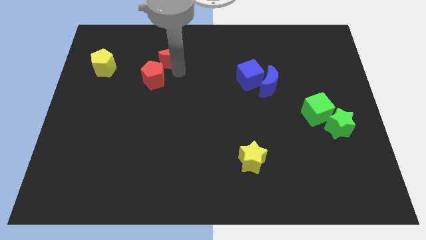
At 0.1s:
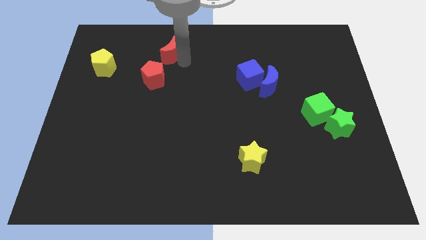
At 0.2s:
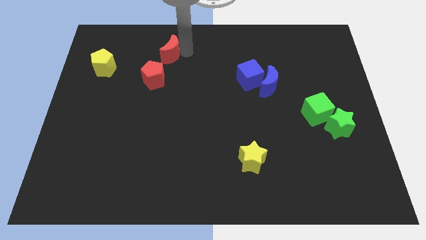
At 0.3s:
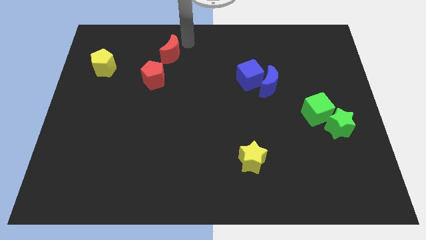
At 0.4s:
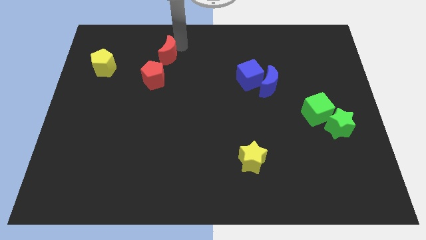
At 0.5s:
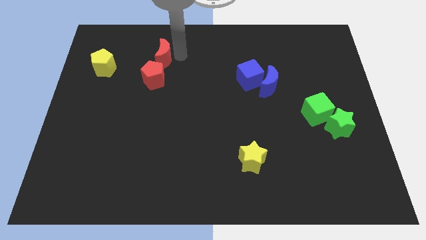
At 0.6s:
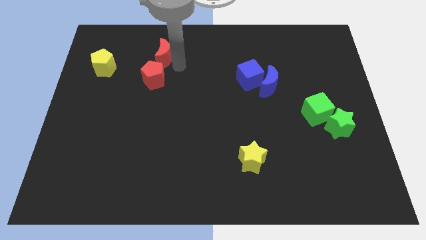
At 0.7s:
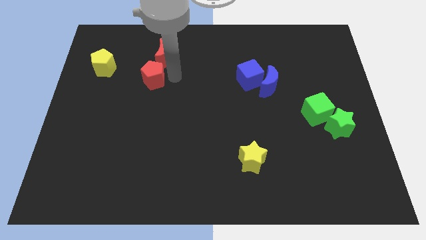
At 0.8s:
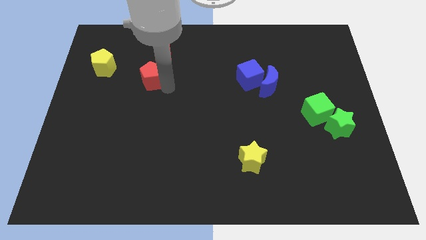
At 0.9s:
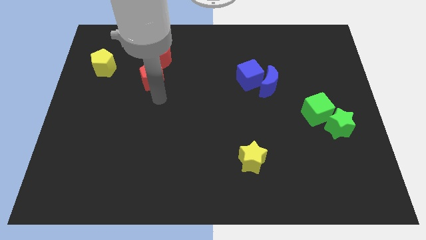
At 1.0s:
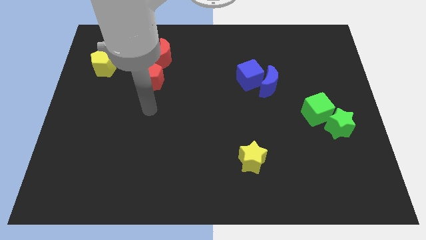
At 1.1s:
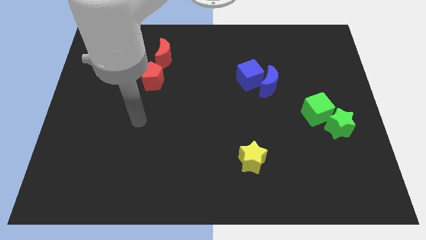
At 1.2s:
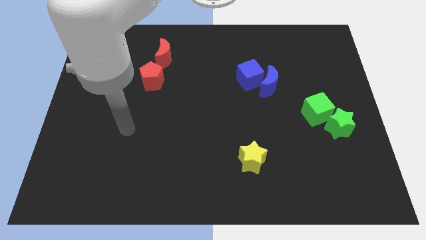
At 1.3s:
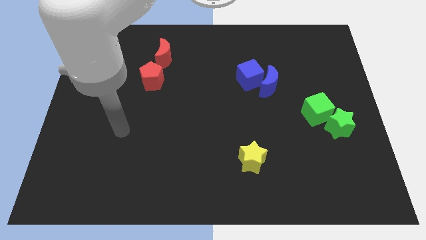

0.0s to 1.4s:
move the red crescent close to the red pentagon

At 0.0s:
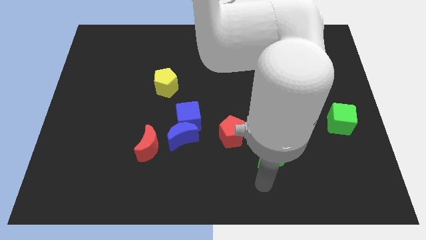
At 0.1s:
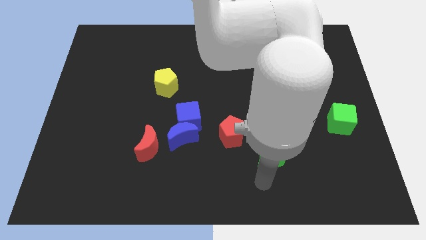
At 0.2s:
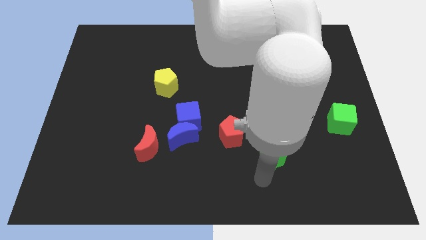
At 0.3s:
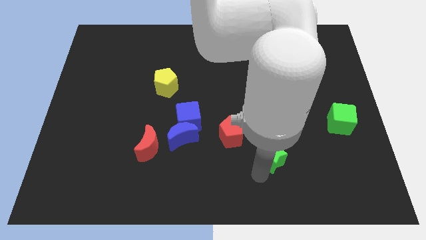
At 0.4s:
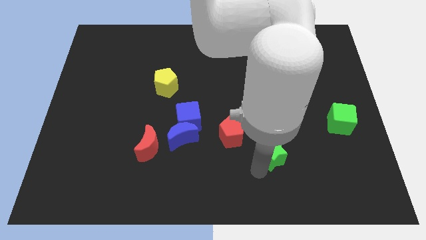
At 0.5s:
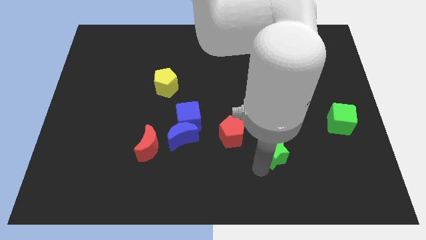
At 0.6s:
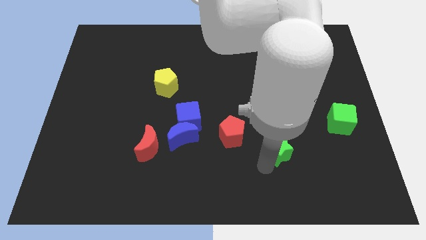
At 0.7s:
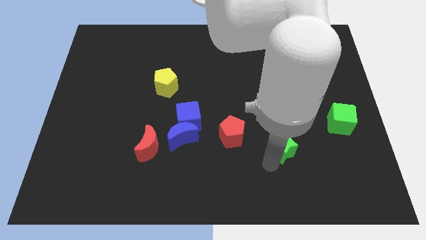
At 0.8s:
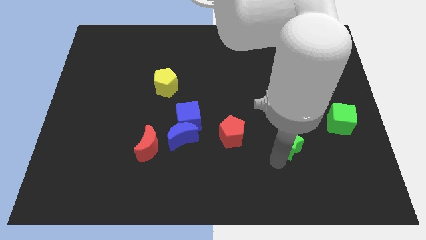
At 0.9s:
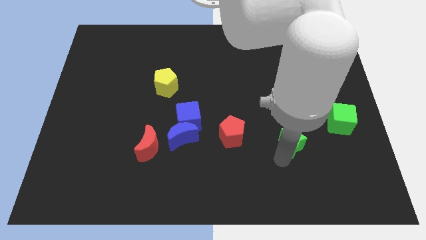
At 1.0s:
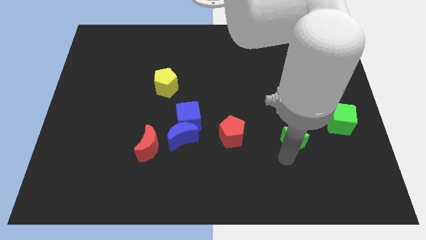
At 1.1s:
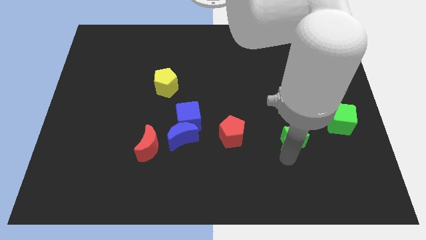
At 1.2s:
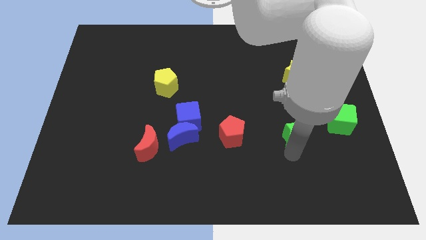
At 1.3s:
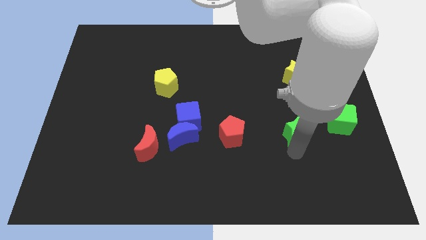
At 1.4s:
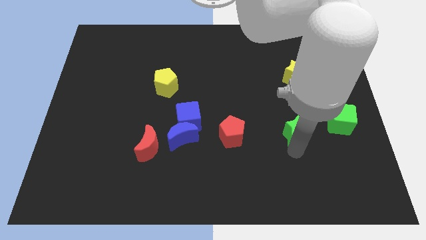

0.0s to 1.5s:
place green star to the right of red pentagon

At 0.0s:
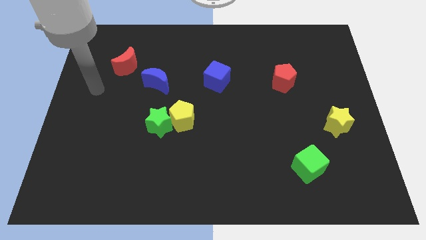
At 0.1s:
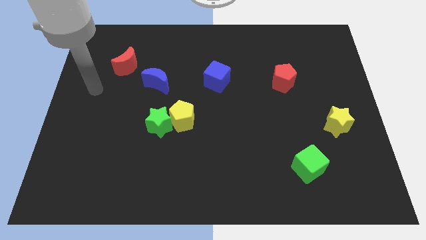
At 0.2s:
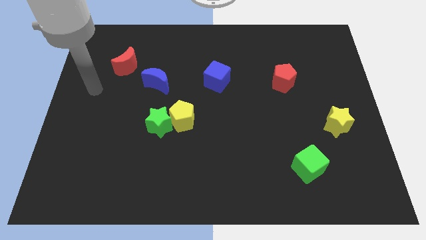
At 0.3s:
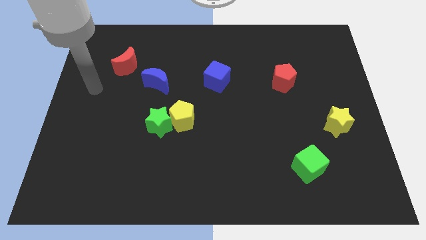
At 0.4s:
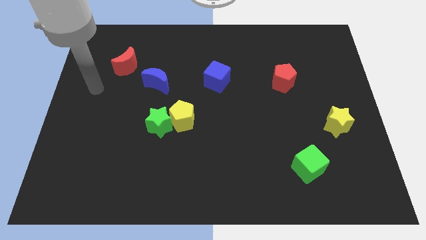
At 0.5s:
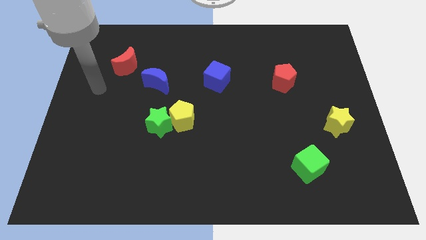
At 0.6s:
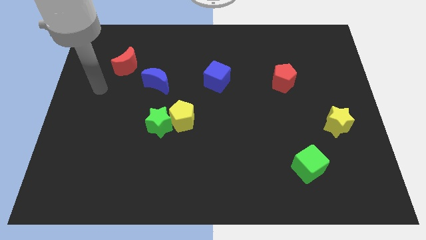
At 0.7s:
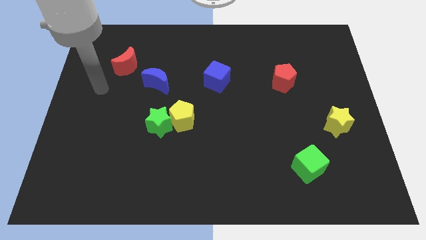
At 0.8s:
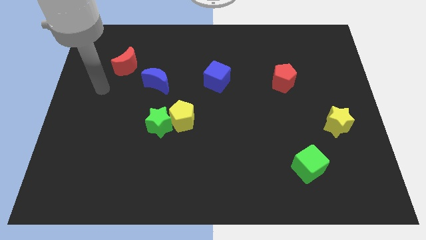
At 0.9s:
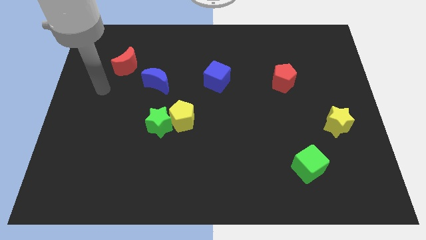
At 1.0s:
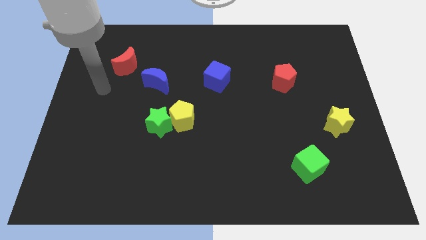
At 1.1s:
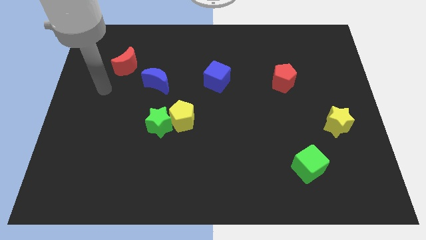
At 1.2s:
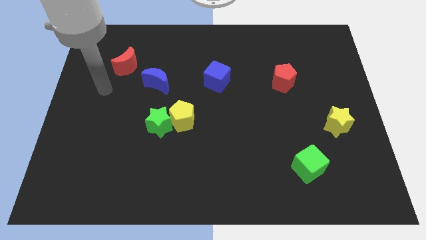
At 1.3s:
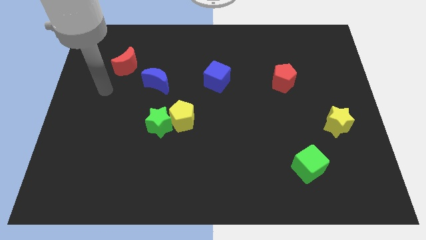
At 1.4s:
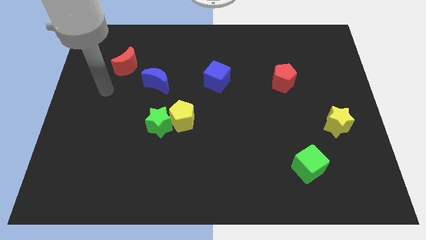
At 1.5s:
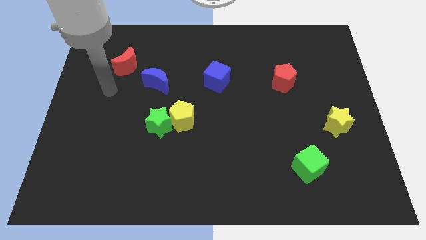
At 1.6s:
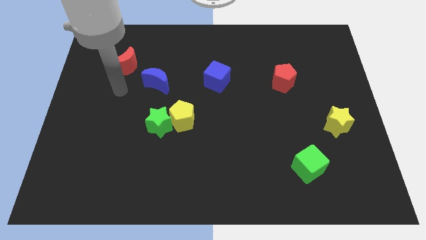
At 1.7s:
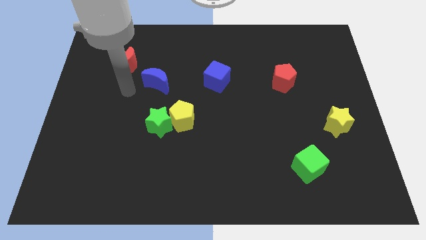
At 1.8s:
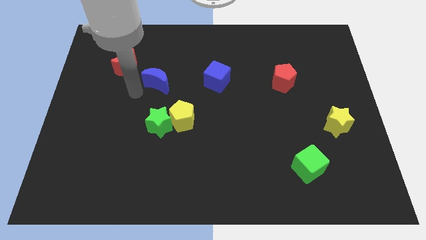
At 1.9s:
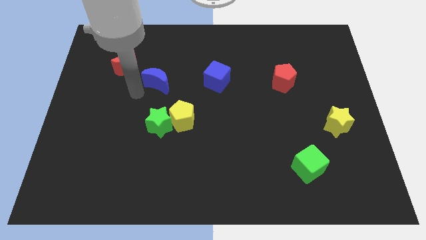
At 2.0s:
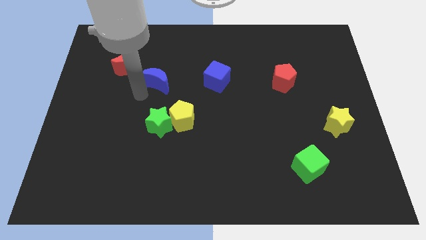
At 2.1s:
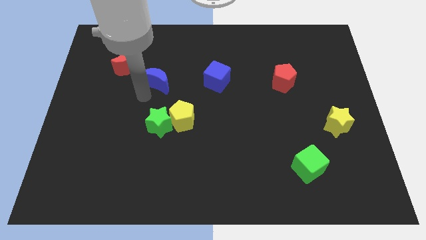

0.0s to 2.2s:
move your arm towards the top left to the green star

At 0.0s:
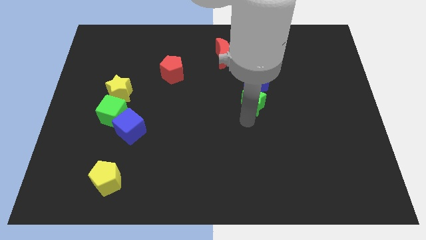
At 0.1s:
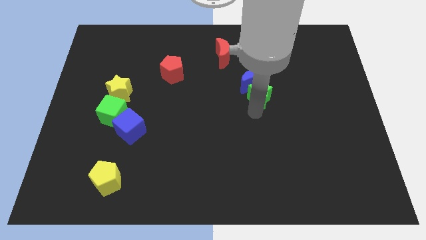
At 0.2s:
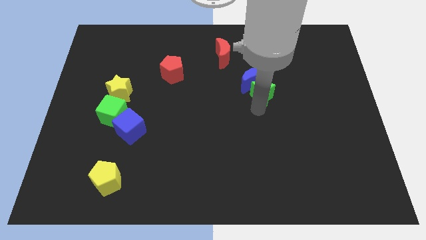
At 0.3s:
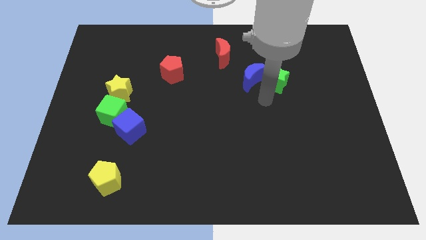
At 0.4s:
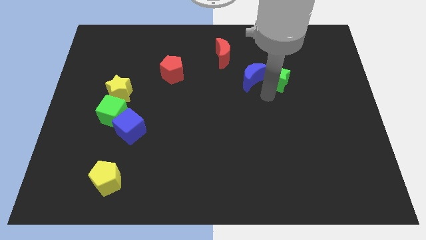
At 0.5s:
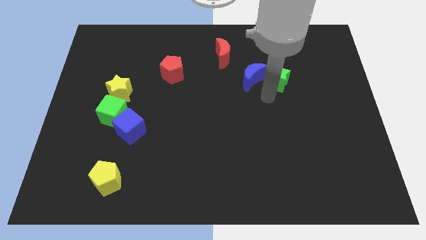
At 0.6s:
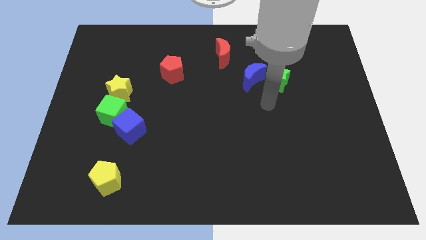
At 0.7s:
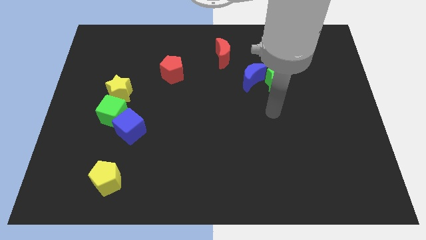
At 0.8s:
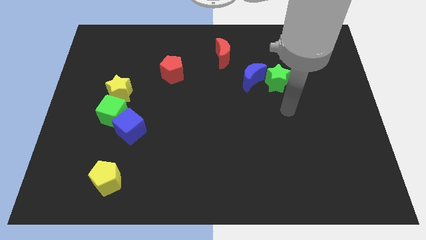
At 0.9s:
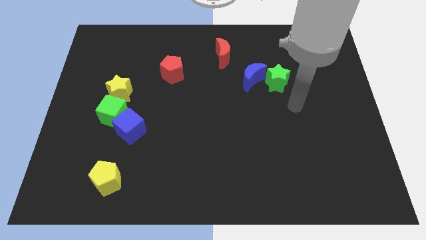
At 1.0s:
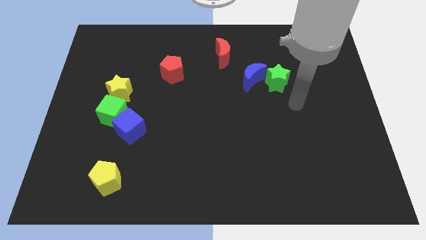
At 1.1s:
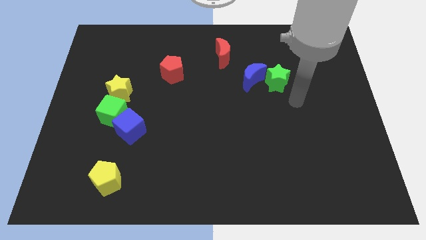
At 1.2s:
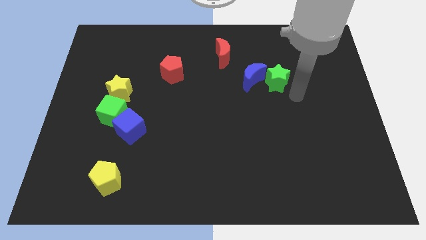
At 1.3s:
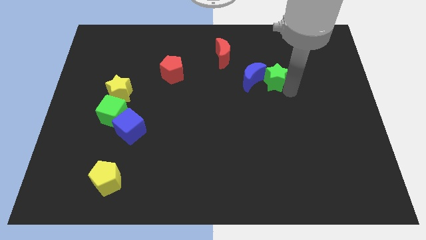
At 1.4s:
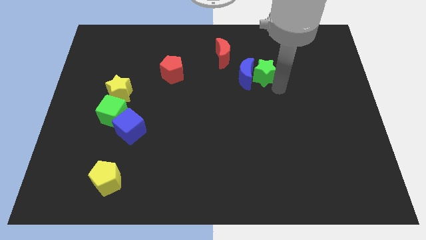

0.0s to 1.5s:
move the green star to the right of the blue crescent

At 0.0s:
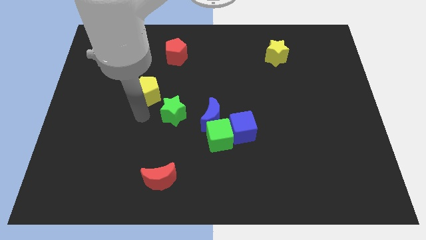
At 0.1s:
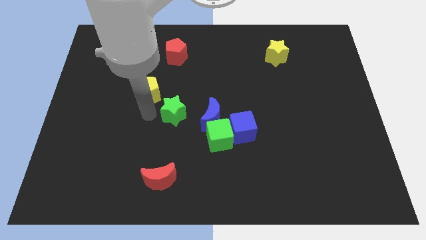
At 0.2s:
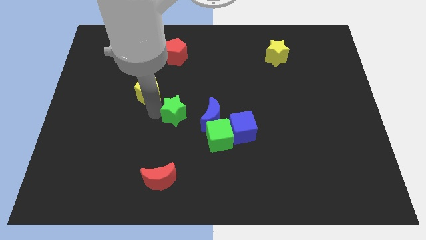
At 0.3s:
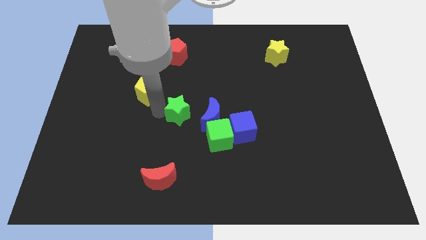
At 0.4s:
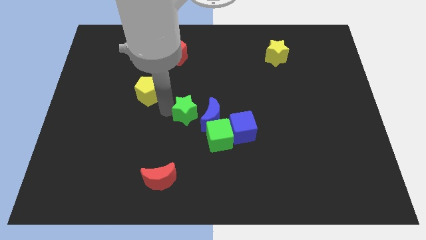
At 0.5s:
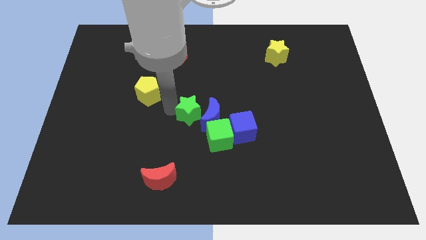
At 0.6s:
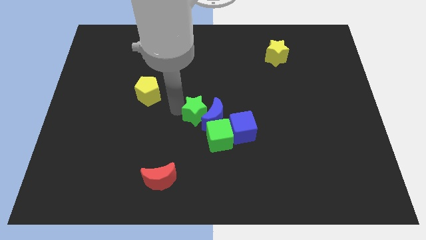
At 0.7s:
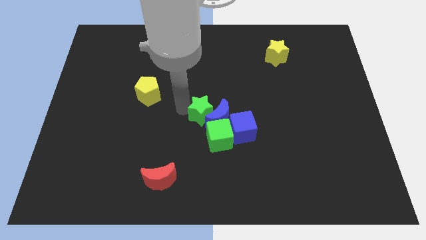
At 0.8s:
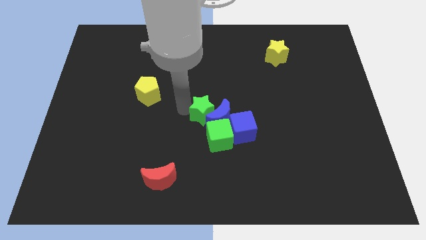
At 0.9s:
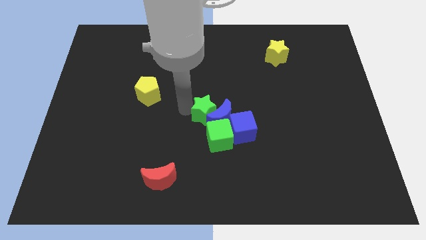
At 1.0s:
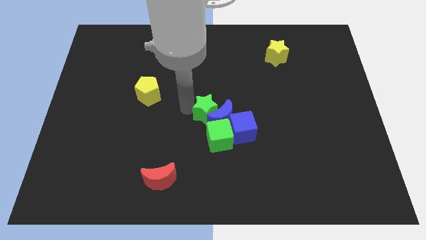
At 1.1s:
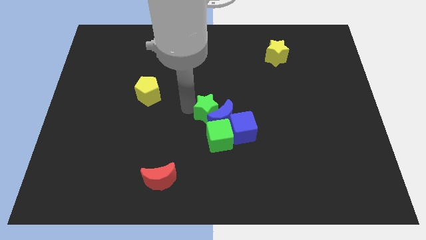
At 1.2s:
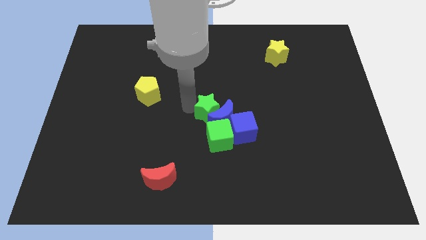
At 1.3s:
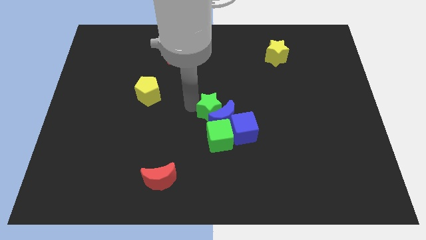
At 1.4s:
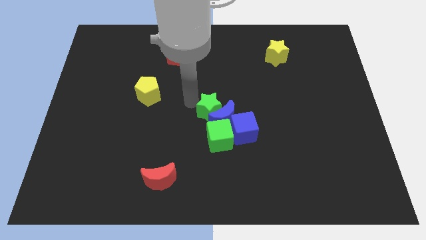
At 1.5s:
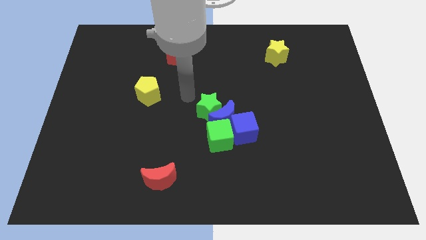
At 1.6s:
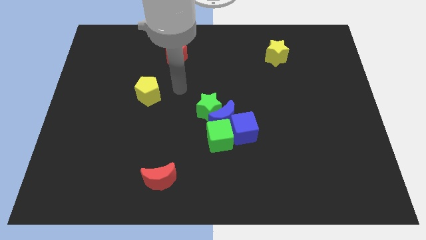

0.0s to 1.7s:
push the green star into the top of the blue crescent

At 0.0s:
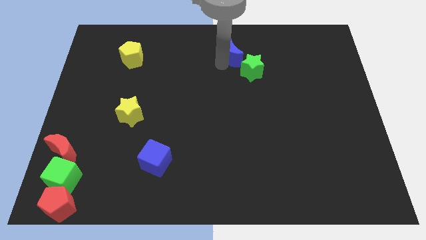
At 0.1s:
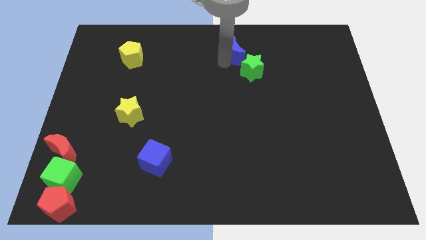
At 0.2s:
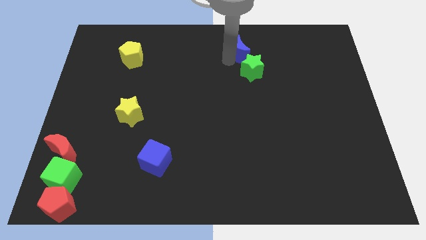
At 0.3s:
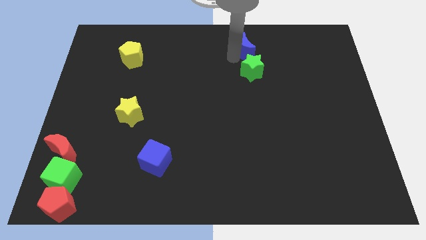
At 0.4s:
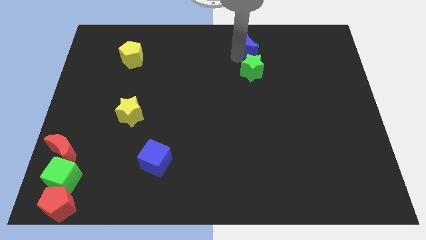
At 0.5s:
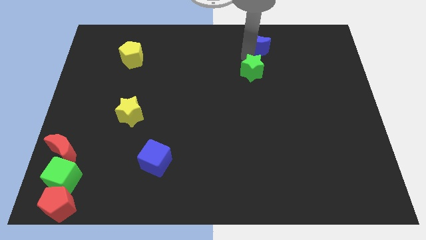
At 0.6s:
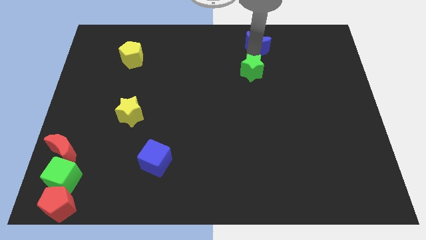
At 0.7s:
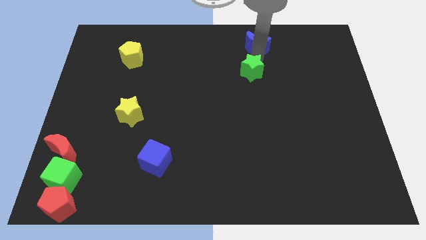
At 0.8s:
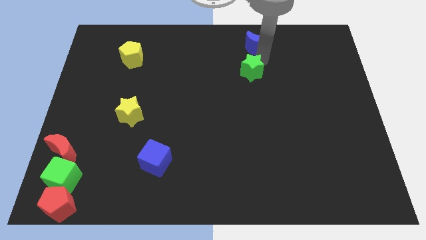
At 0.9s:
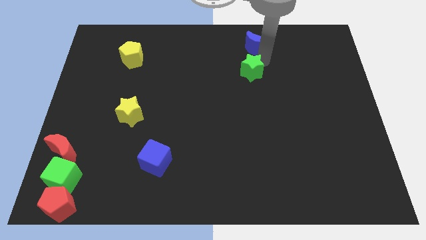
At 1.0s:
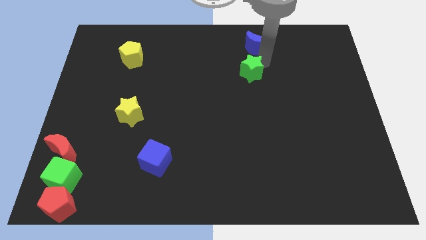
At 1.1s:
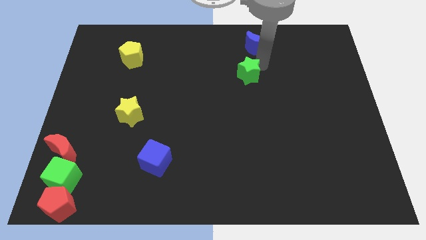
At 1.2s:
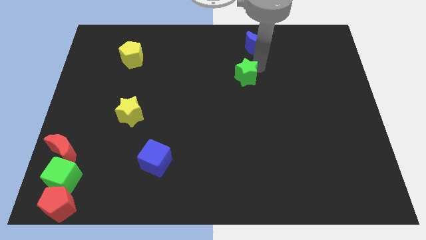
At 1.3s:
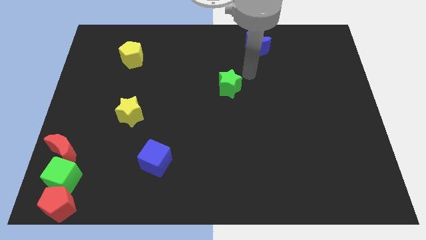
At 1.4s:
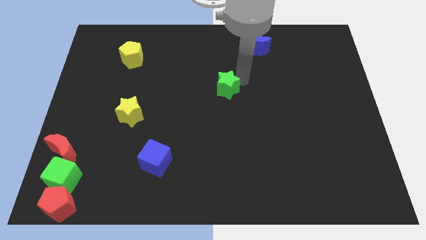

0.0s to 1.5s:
separate green star and blue moon
